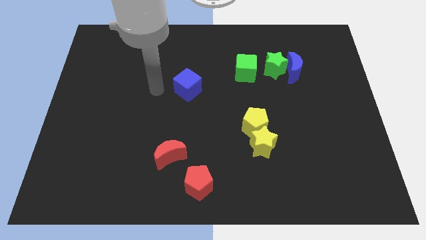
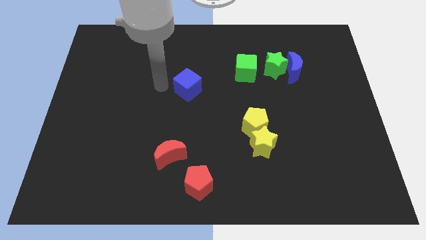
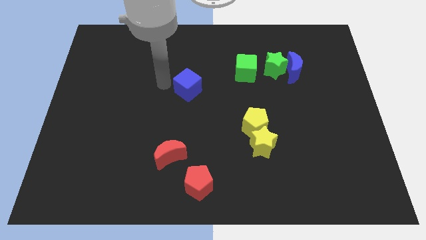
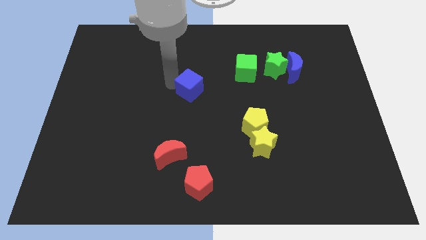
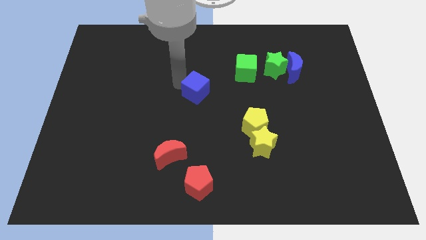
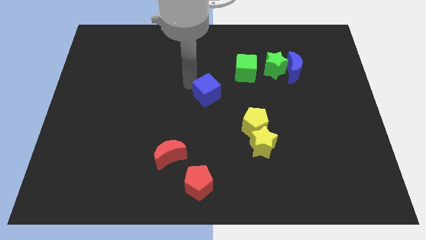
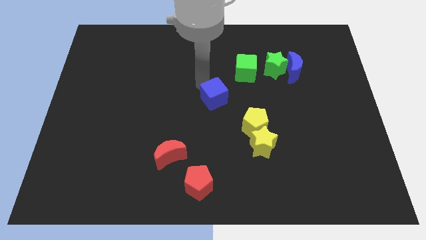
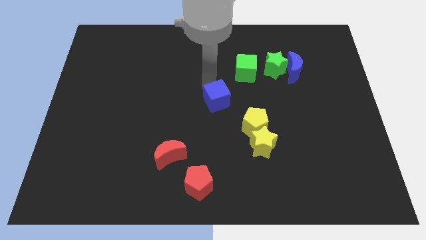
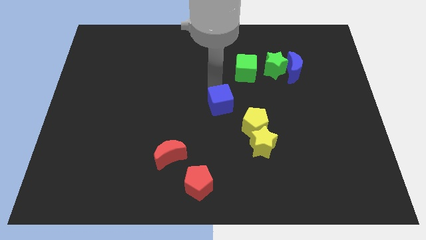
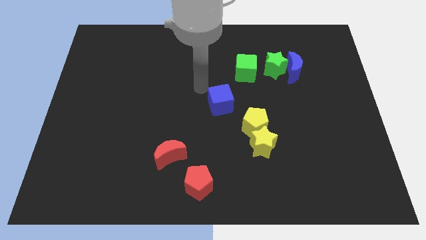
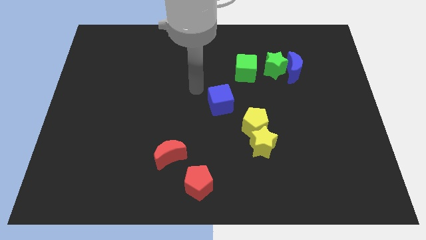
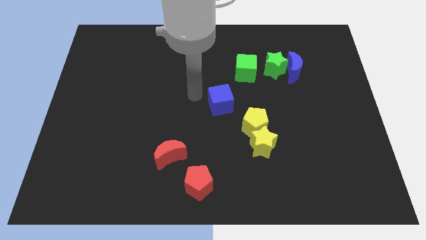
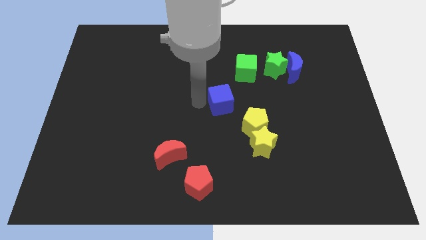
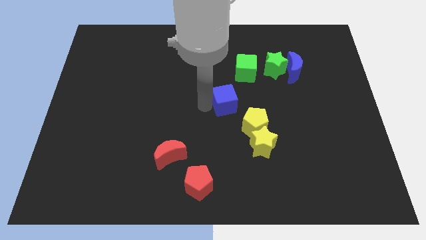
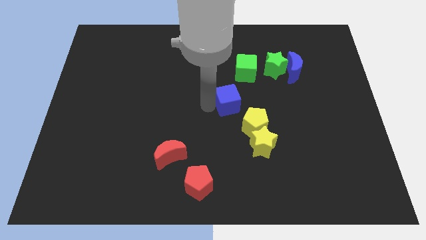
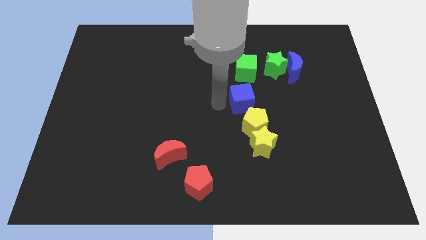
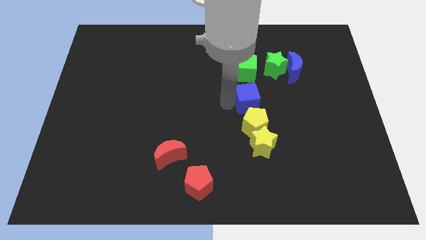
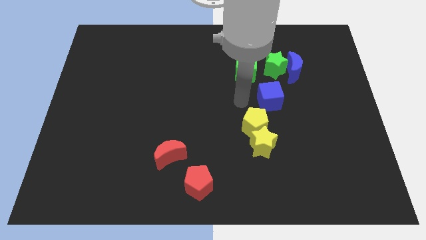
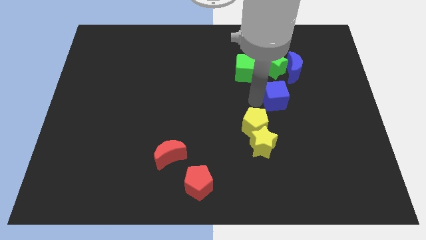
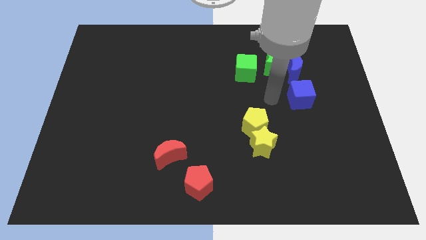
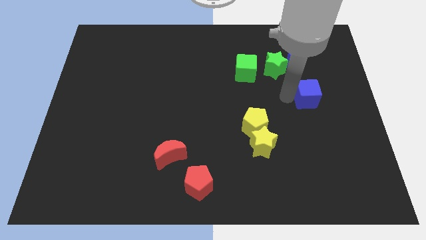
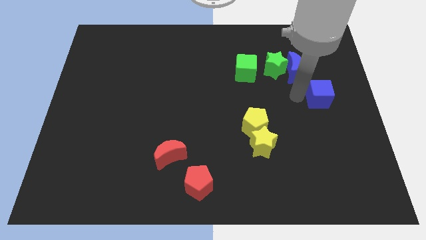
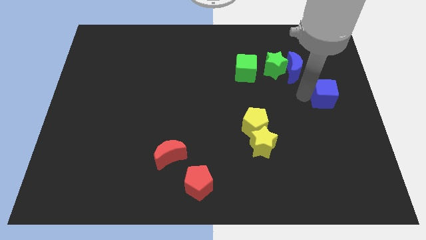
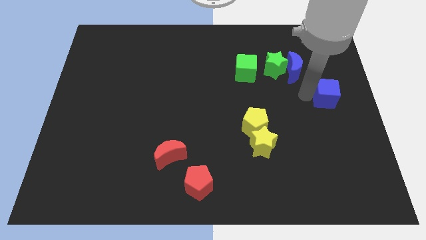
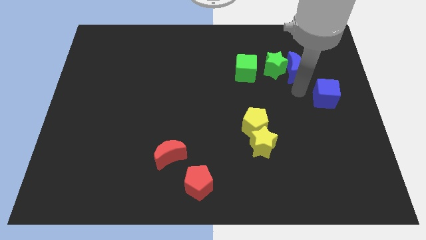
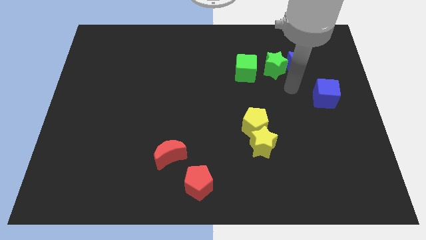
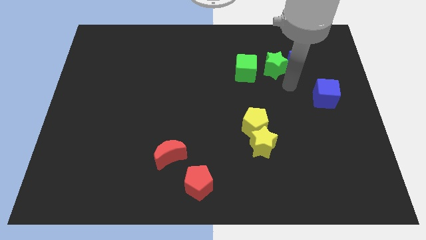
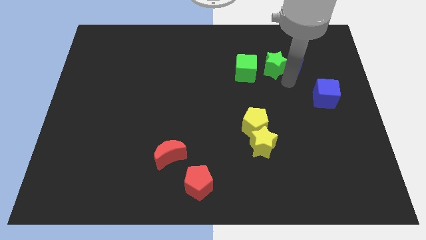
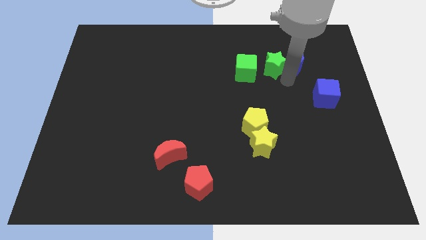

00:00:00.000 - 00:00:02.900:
move the blue cube towards right center of the board

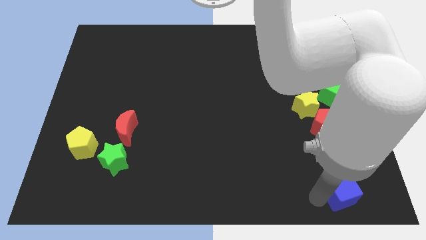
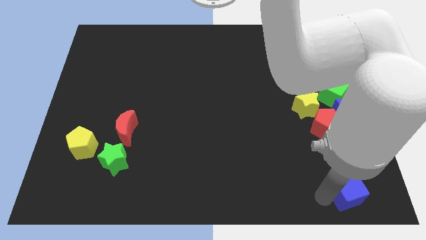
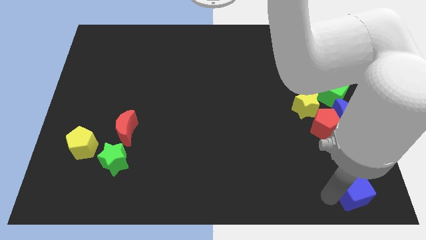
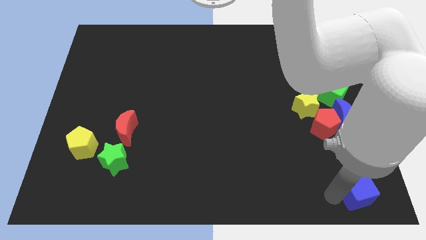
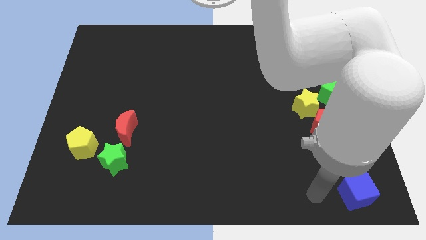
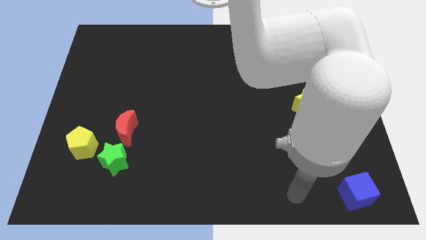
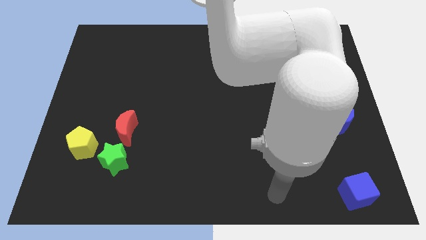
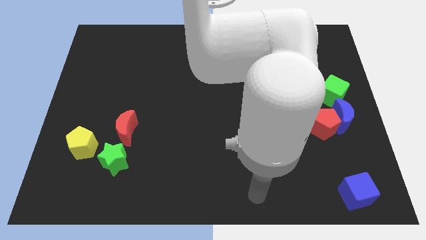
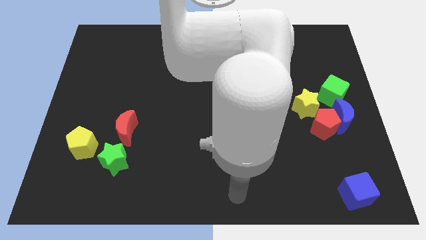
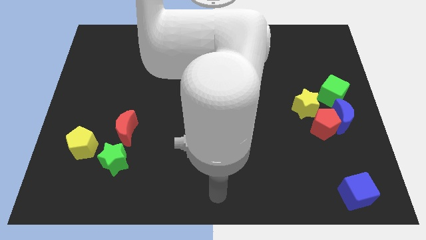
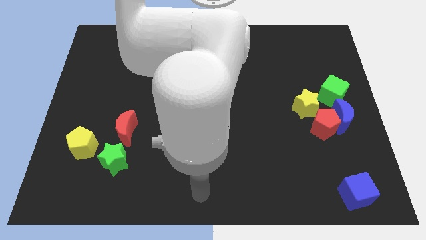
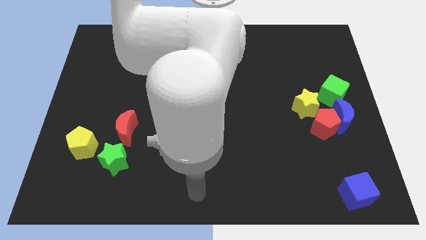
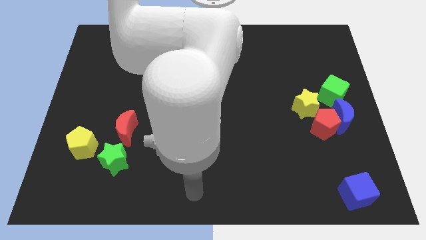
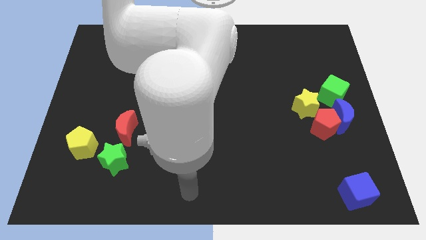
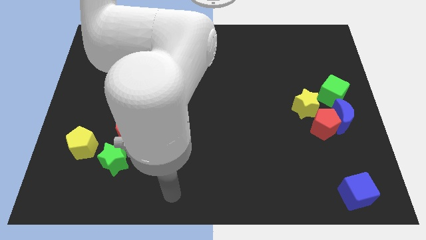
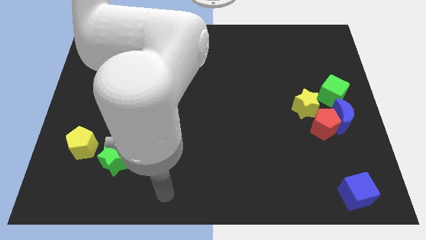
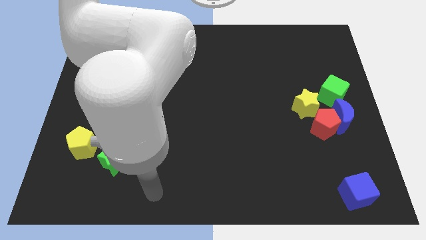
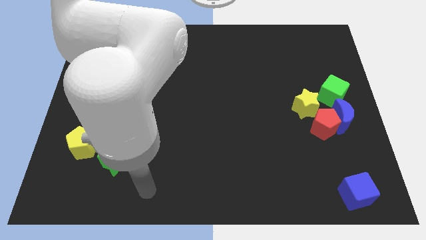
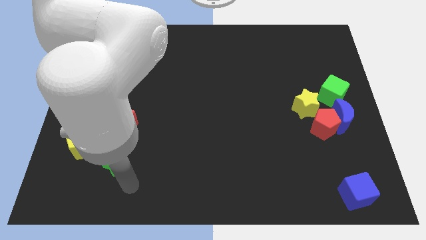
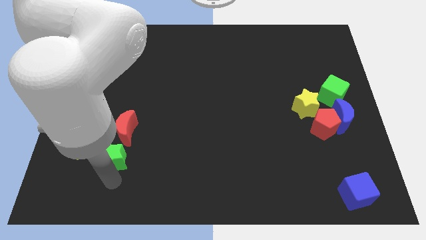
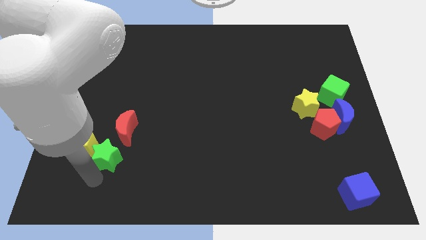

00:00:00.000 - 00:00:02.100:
place the blue cube below the blue crescent

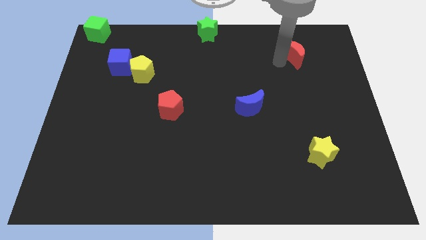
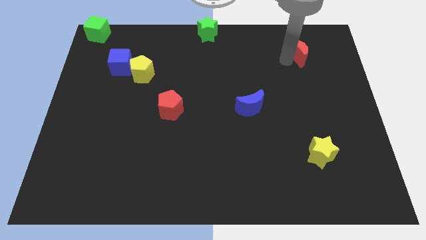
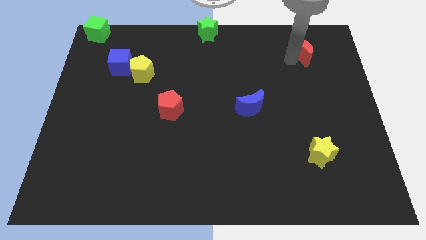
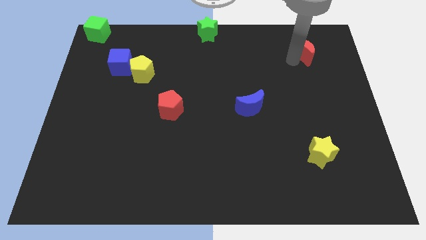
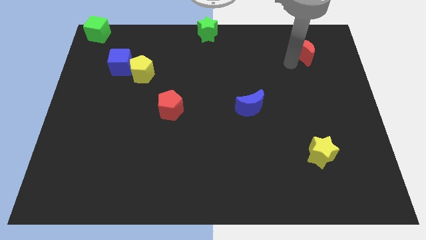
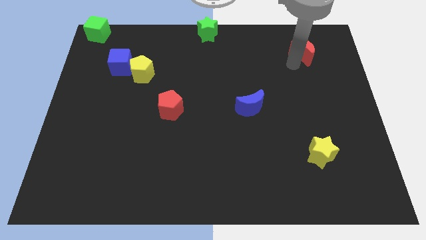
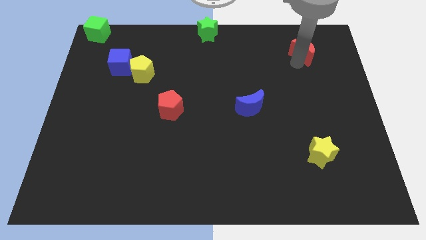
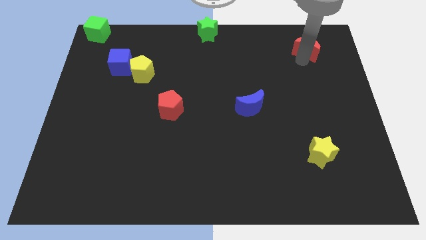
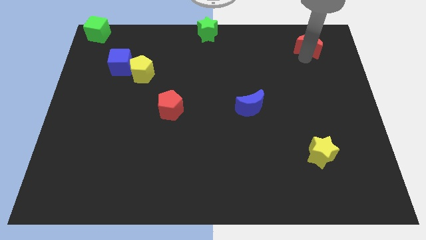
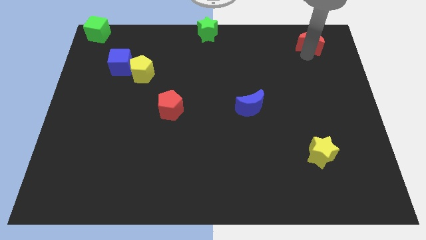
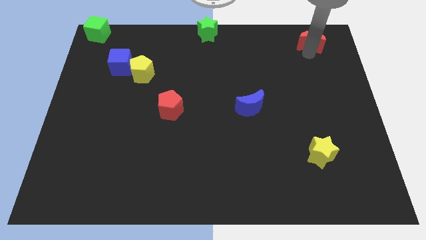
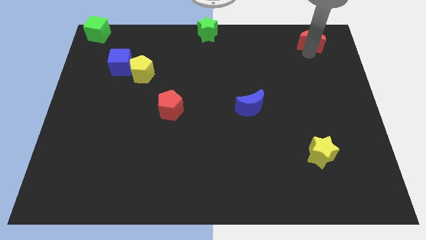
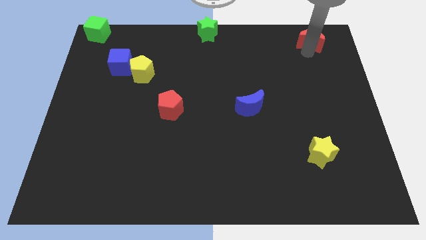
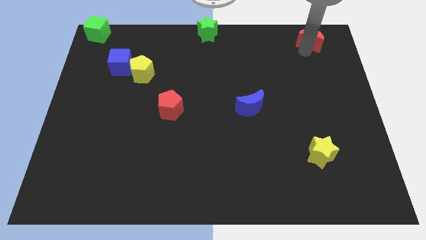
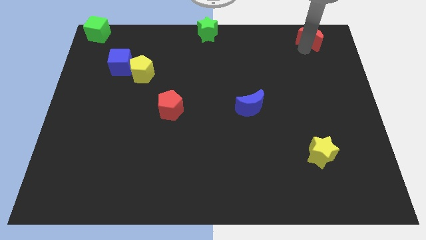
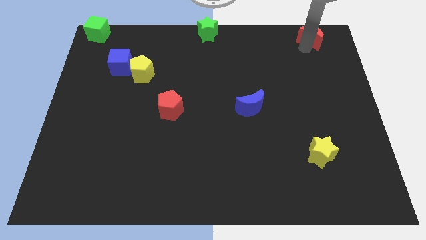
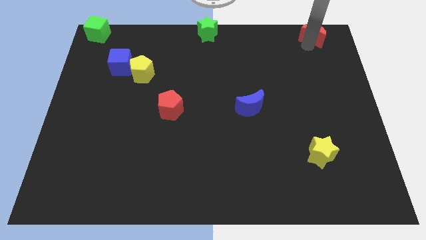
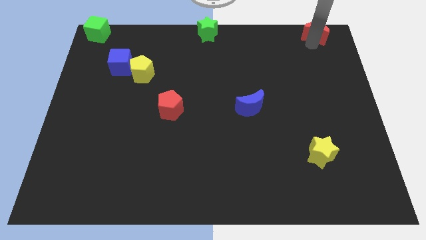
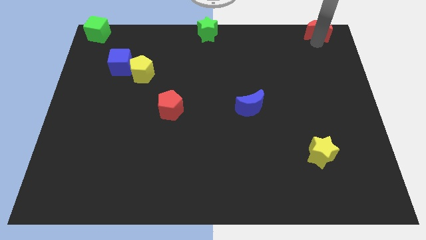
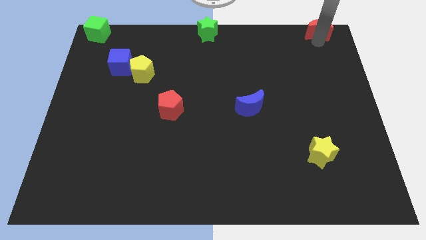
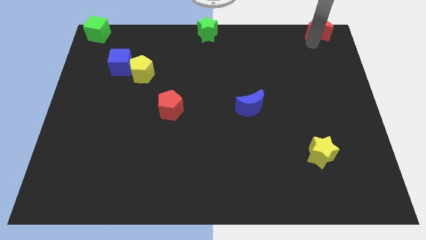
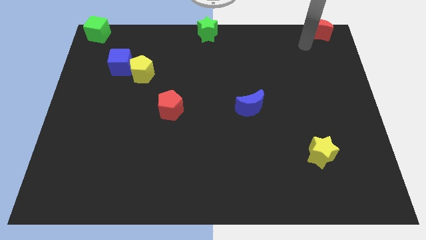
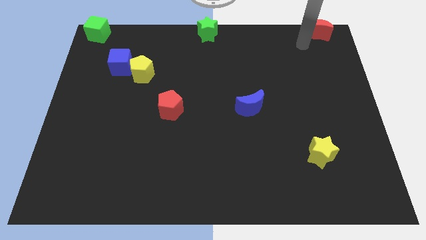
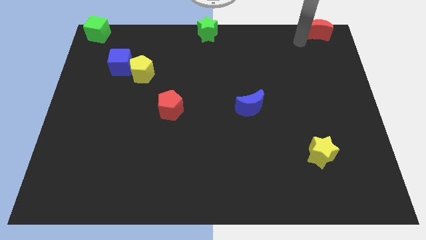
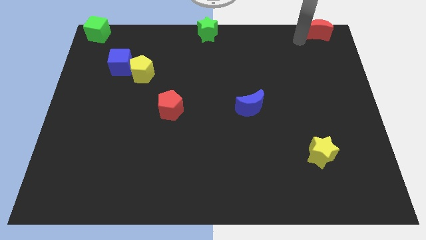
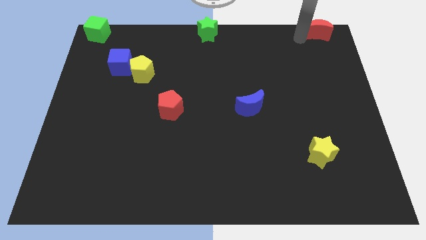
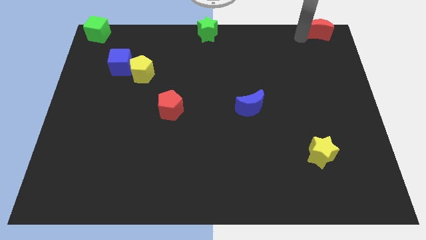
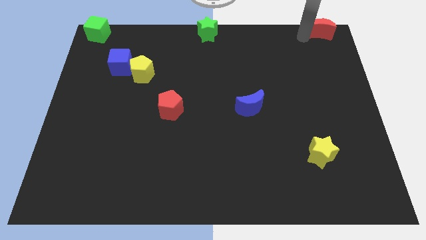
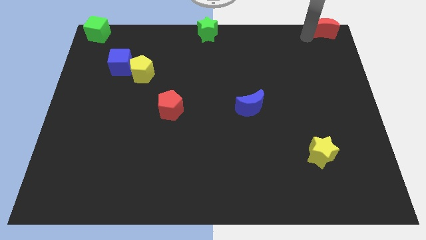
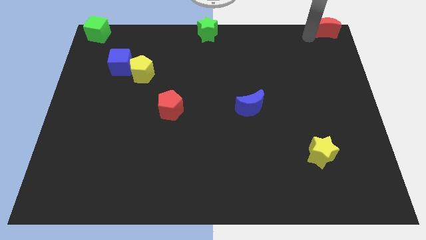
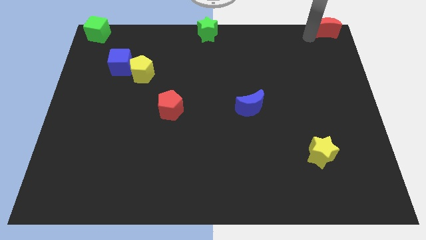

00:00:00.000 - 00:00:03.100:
push red crescent towards top right end corner

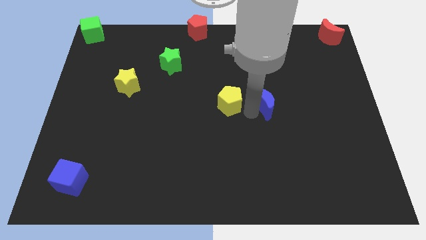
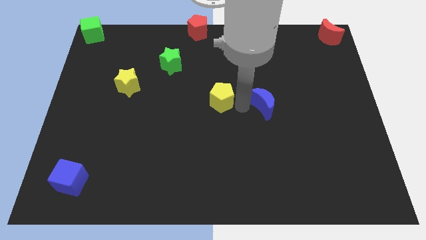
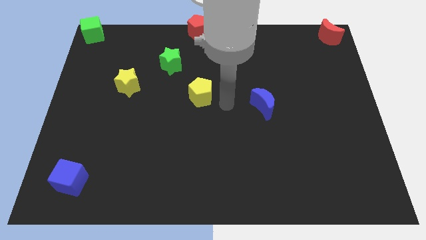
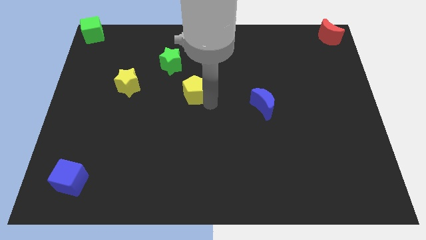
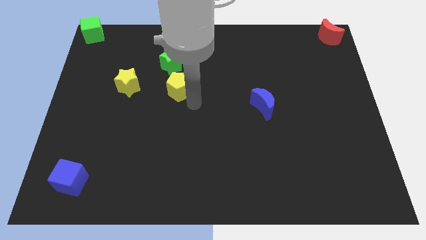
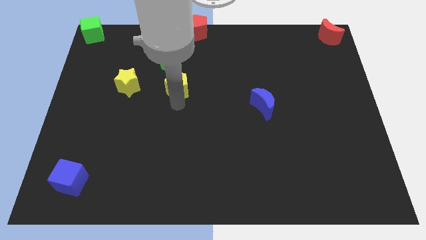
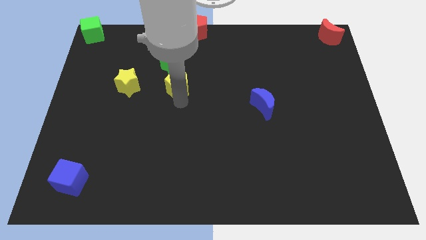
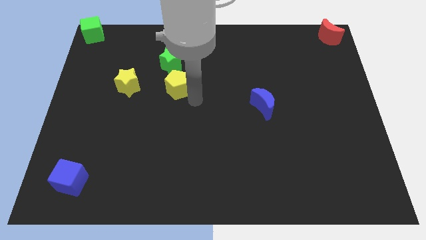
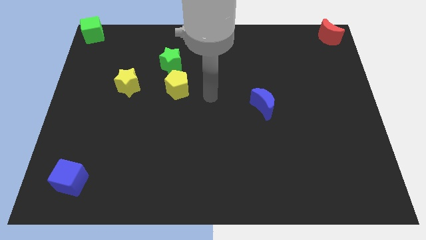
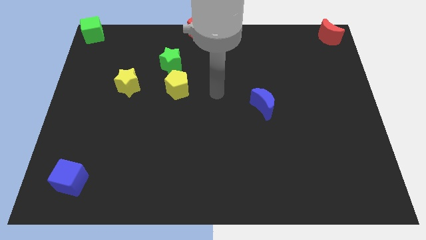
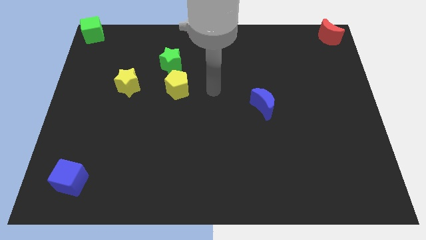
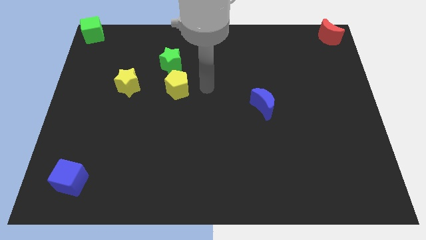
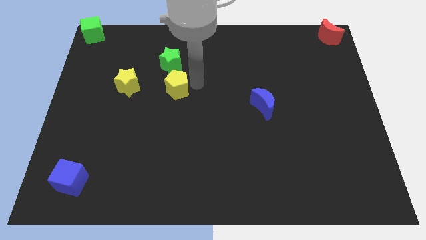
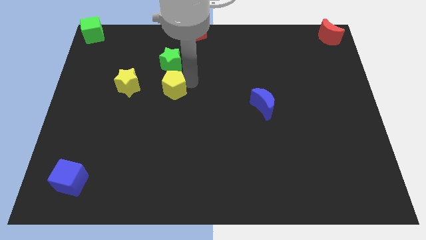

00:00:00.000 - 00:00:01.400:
push the yellow pentagon away from the blue crescent
